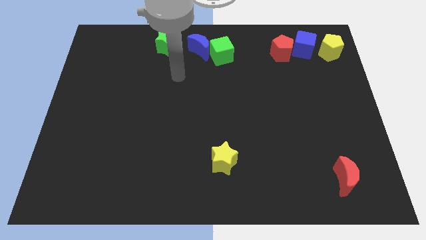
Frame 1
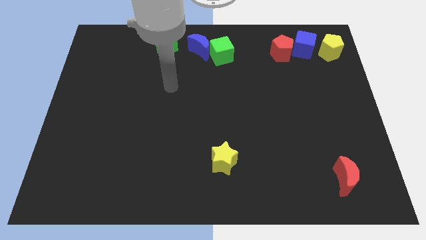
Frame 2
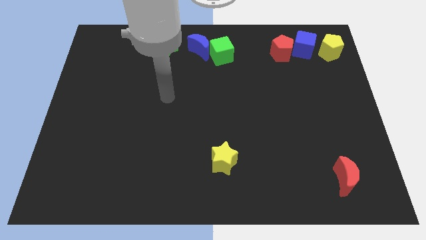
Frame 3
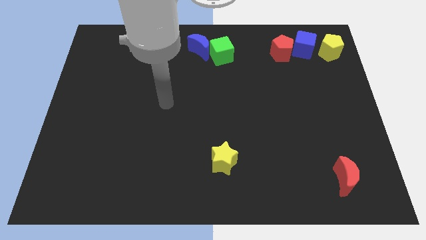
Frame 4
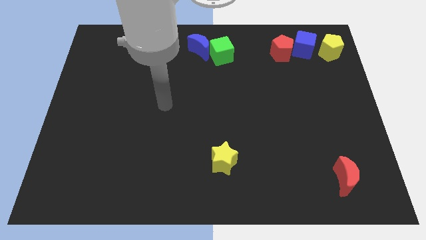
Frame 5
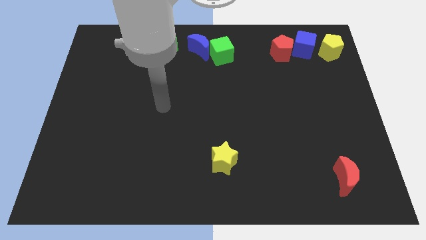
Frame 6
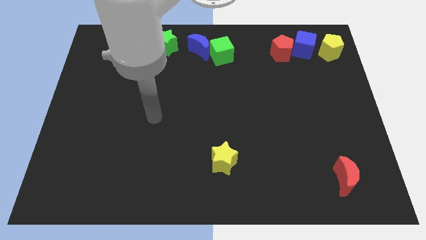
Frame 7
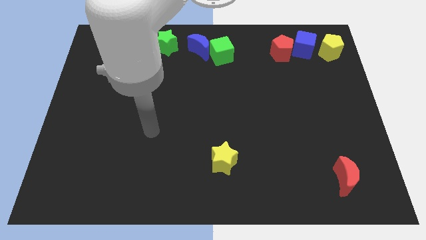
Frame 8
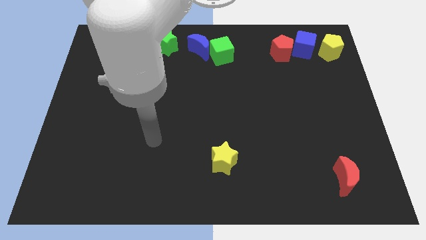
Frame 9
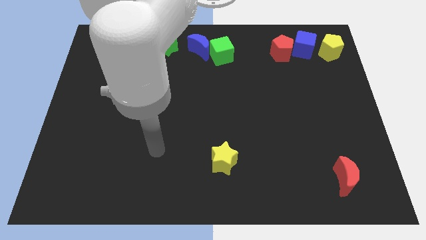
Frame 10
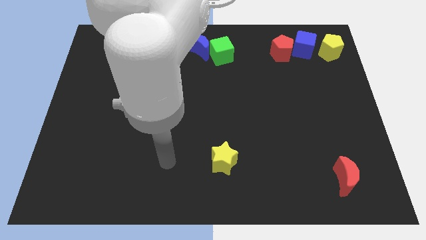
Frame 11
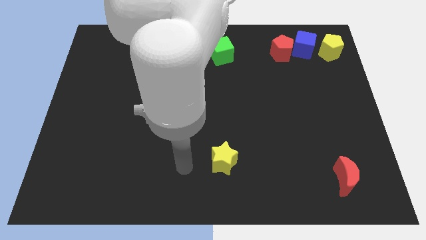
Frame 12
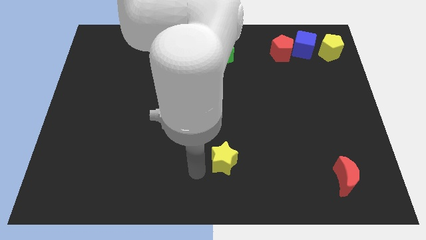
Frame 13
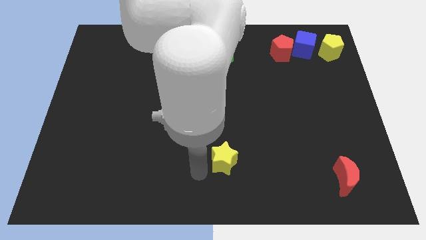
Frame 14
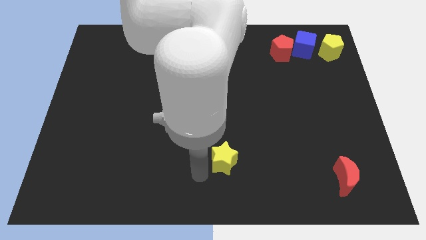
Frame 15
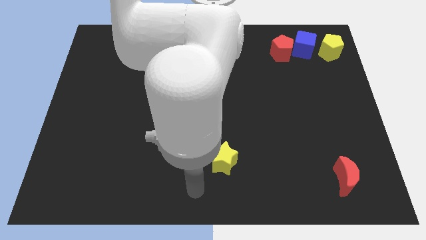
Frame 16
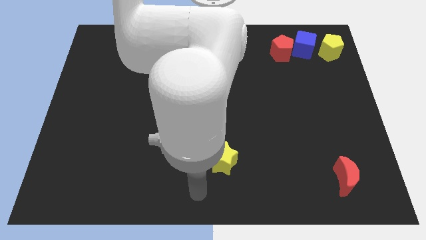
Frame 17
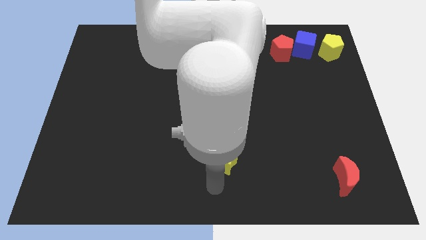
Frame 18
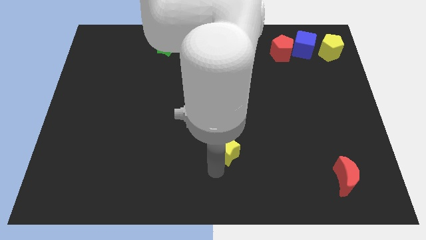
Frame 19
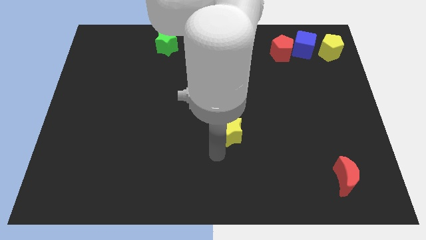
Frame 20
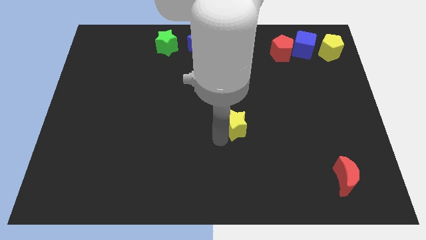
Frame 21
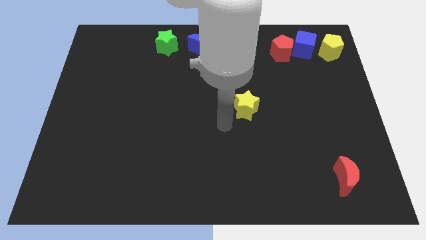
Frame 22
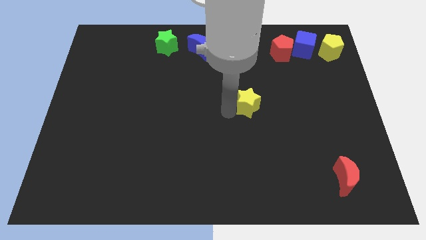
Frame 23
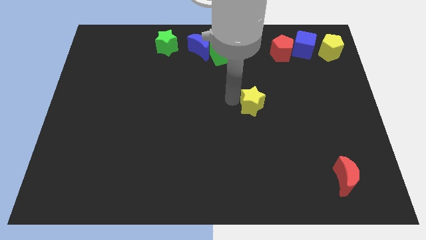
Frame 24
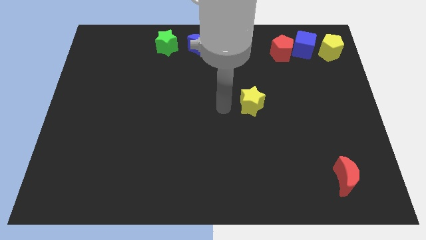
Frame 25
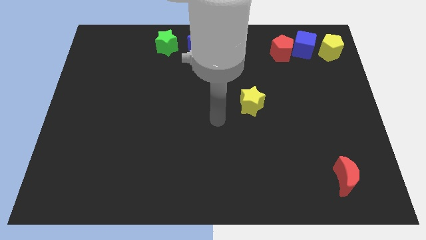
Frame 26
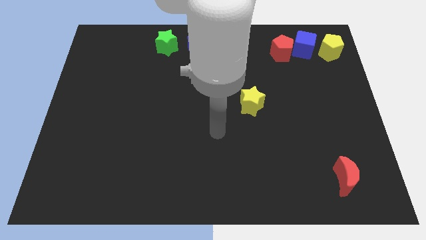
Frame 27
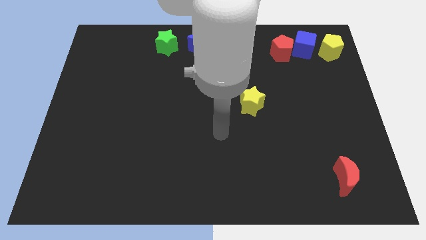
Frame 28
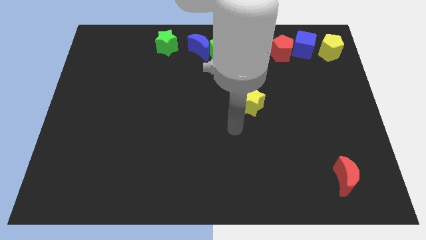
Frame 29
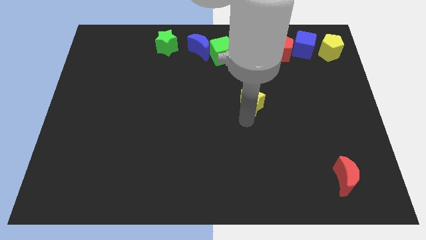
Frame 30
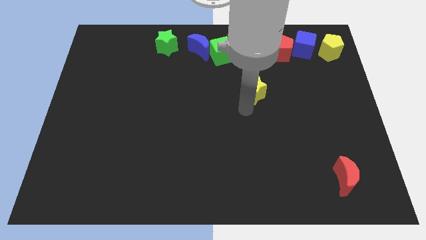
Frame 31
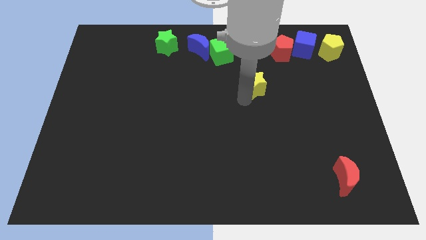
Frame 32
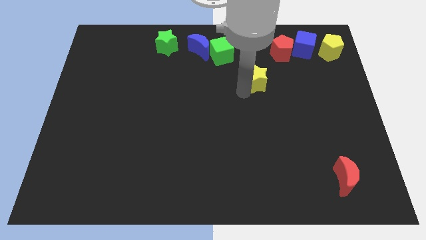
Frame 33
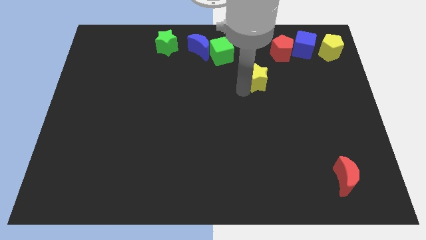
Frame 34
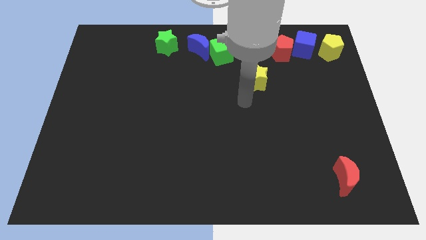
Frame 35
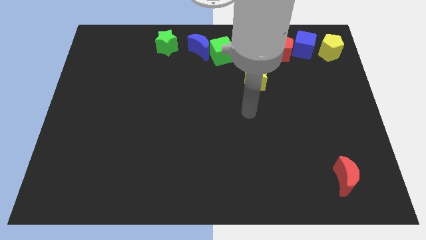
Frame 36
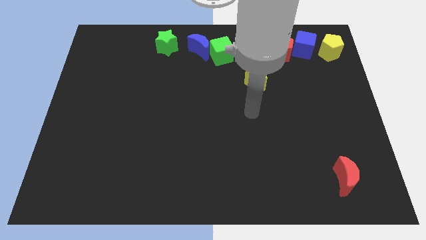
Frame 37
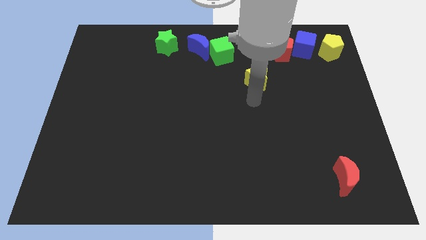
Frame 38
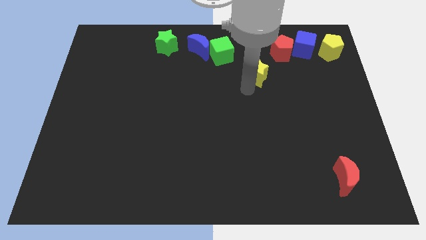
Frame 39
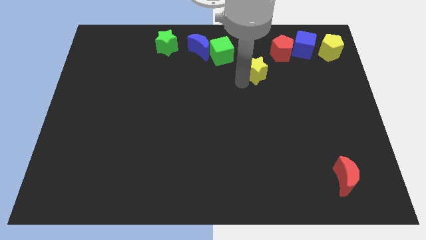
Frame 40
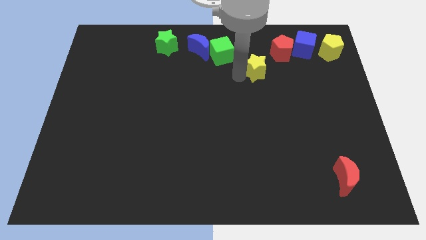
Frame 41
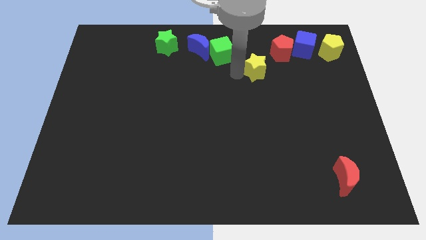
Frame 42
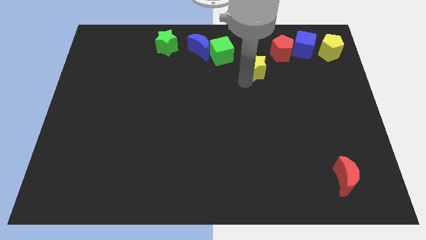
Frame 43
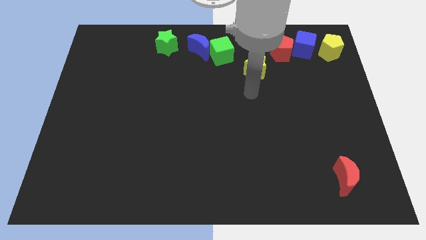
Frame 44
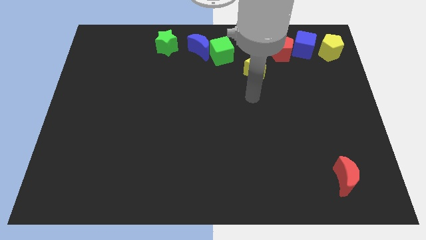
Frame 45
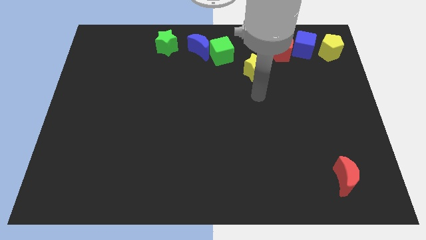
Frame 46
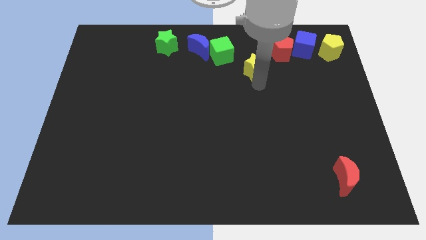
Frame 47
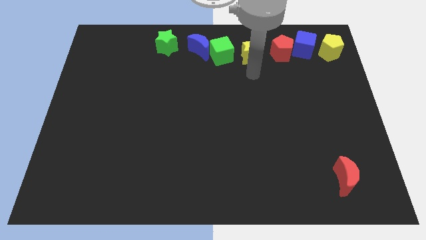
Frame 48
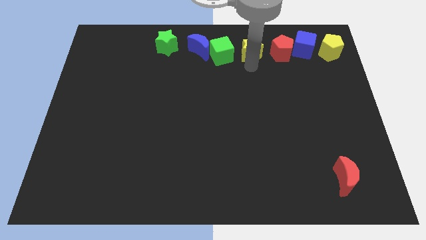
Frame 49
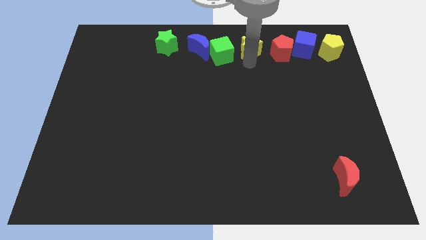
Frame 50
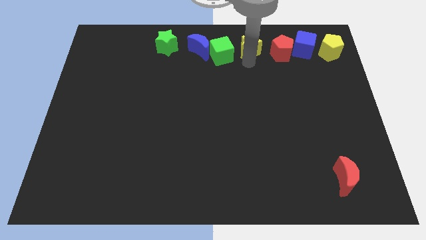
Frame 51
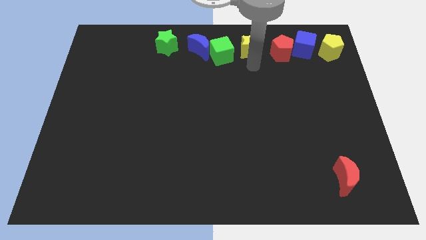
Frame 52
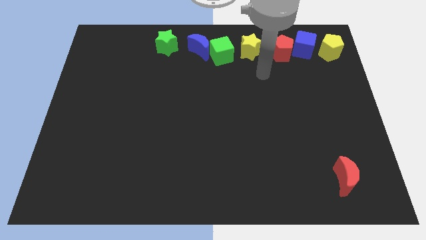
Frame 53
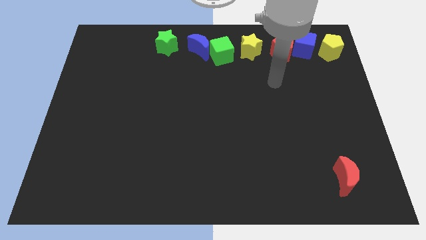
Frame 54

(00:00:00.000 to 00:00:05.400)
join the yellow star with the group of blocks

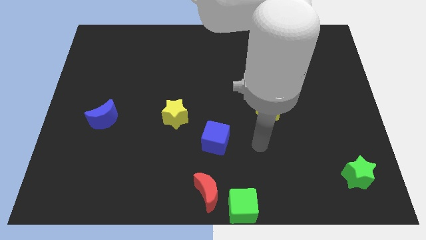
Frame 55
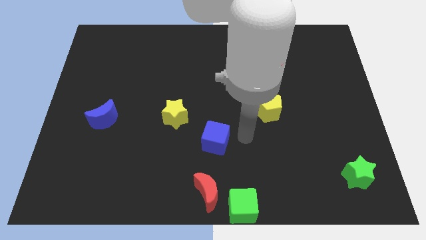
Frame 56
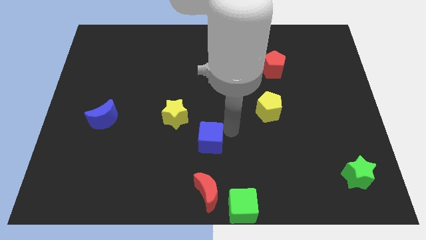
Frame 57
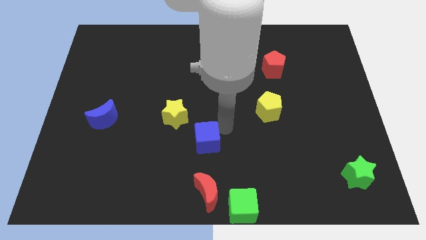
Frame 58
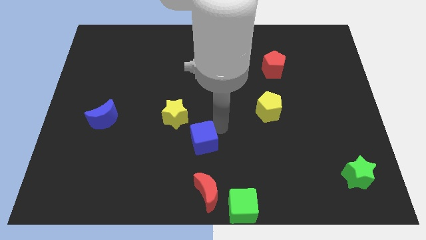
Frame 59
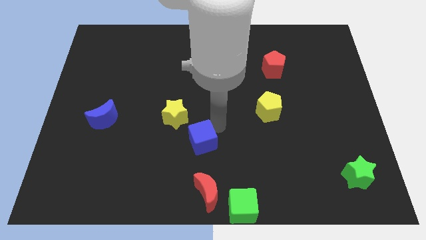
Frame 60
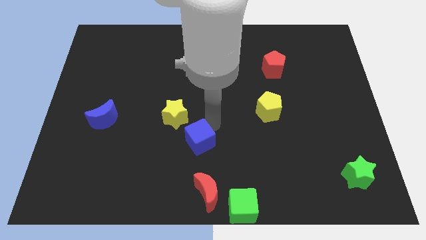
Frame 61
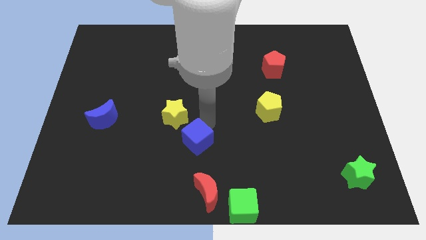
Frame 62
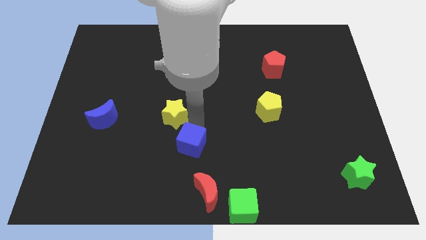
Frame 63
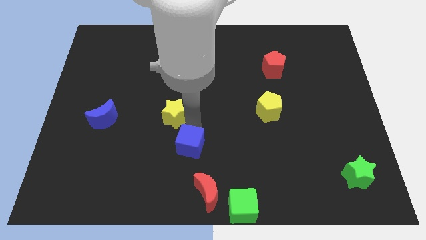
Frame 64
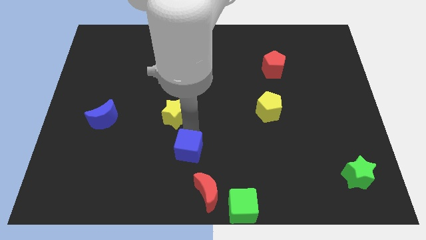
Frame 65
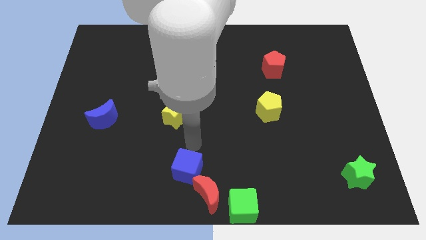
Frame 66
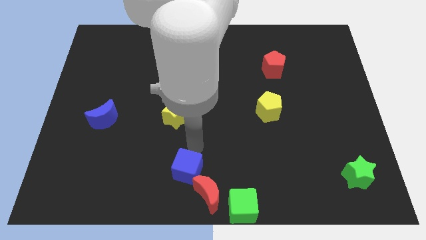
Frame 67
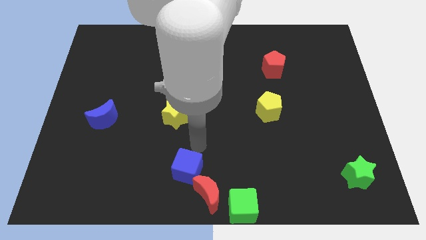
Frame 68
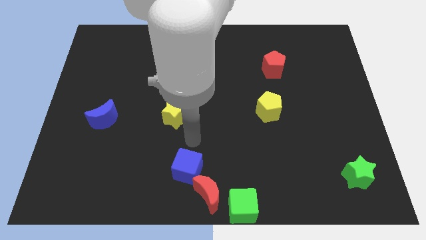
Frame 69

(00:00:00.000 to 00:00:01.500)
make the blue cube to touch the top side of the red crescent

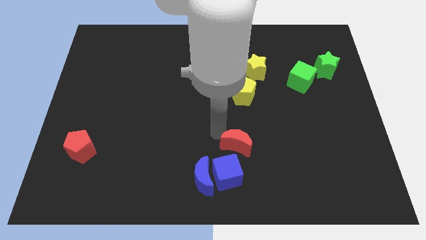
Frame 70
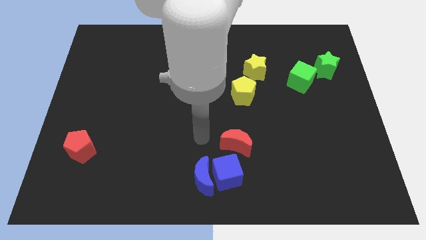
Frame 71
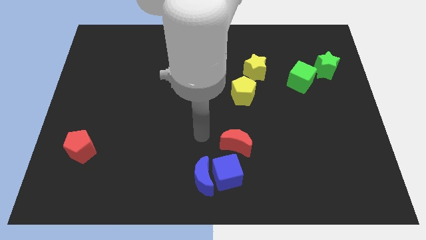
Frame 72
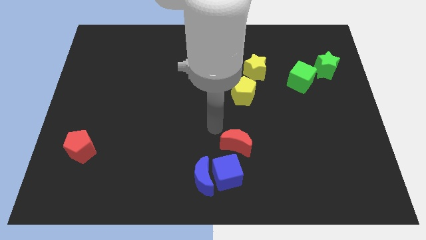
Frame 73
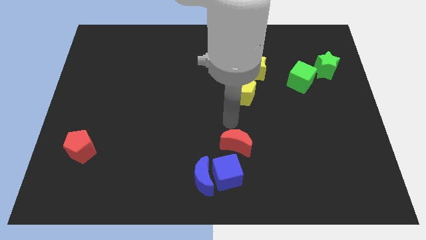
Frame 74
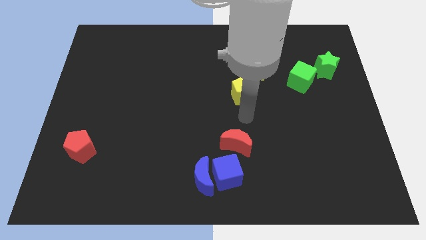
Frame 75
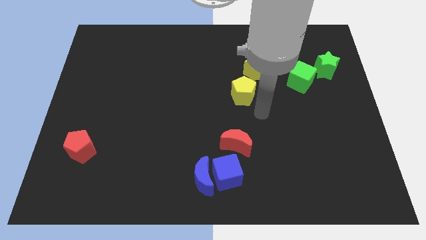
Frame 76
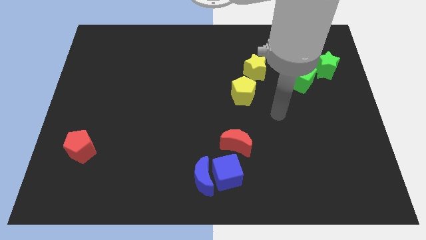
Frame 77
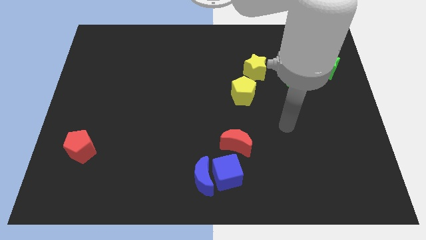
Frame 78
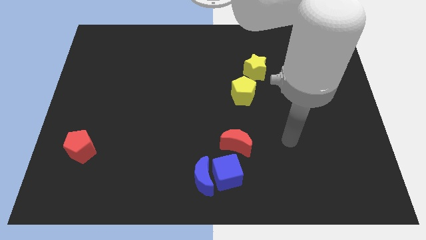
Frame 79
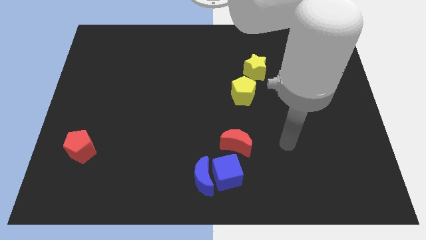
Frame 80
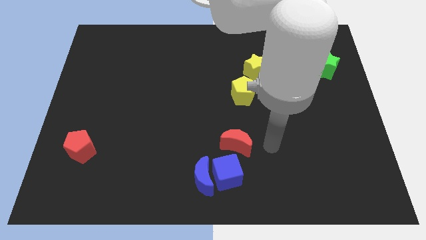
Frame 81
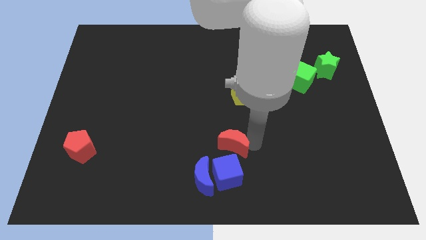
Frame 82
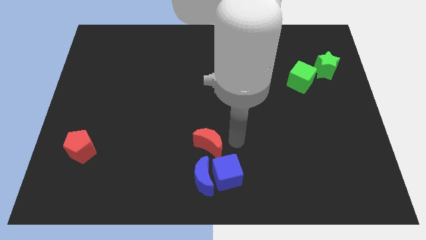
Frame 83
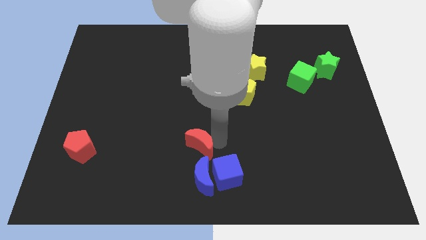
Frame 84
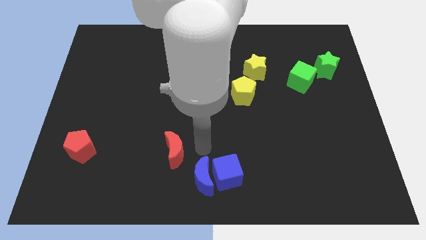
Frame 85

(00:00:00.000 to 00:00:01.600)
move the red moon above the blue moon

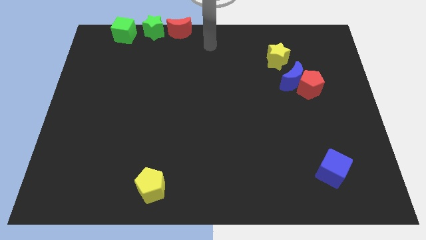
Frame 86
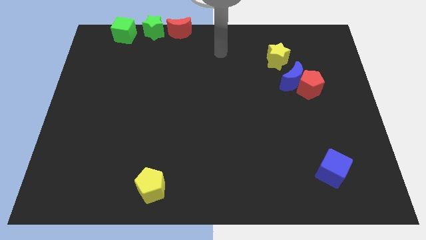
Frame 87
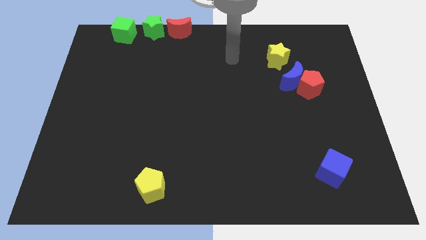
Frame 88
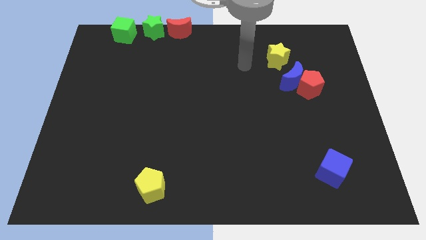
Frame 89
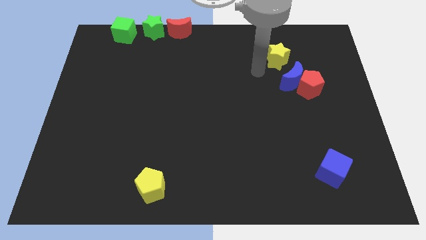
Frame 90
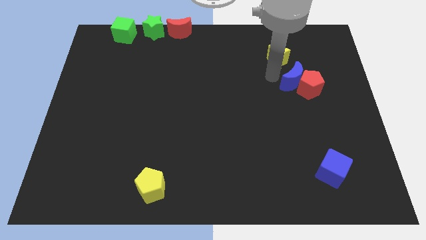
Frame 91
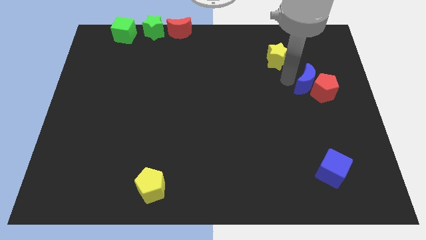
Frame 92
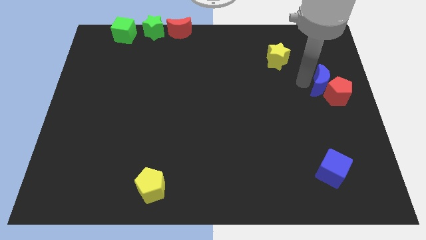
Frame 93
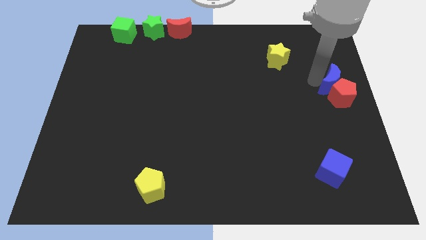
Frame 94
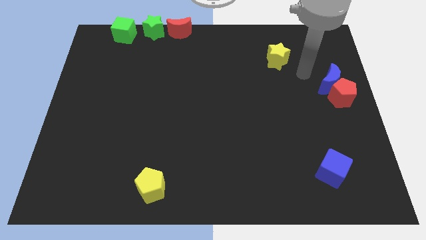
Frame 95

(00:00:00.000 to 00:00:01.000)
move the red pentagon along with blue crescent towards right center of the board
